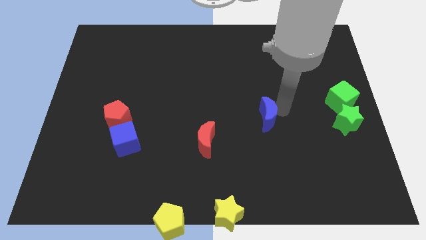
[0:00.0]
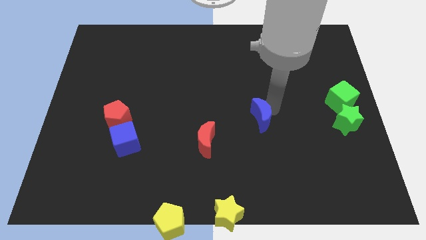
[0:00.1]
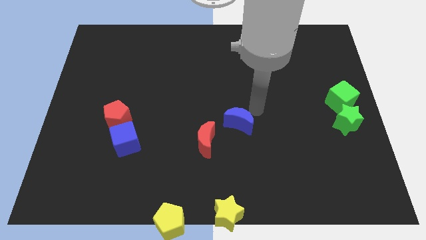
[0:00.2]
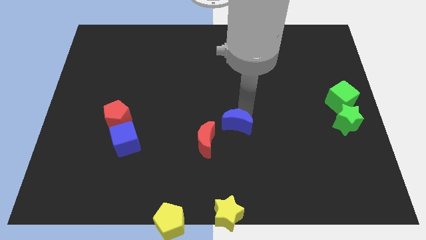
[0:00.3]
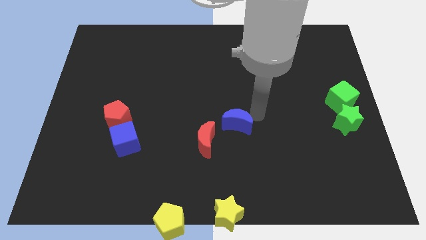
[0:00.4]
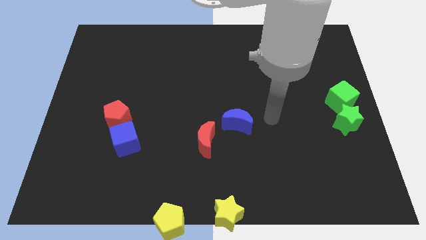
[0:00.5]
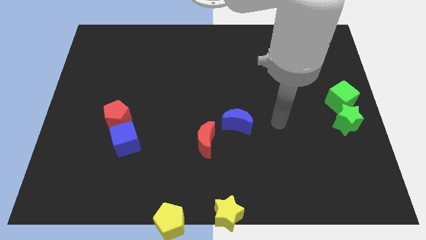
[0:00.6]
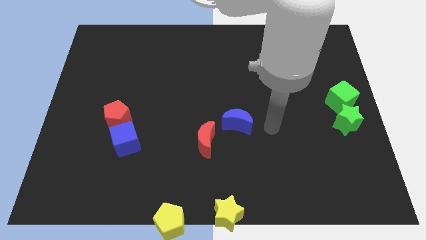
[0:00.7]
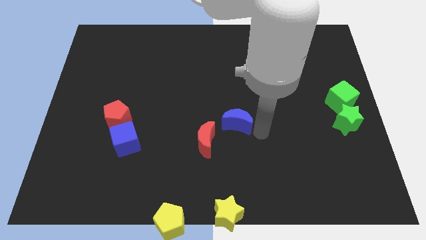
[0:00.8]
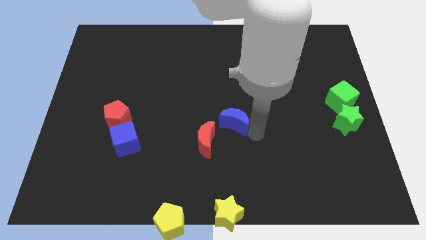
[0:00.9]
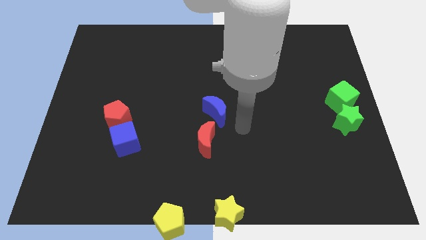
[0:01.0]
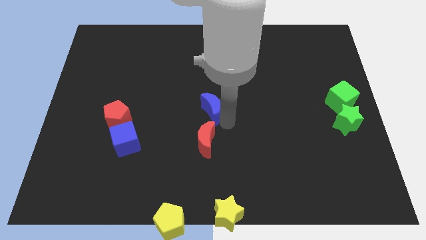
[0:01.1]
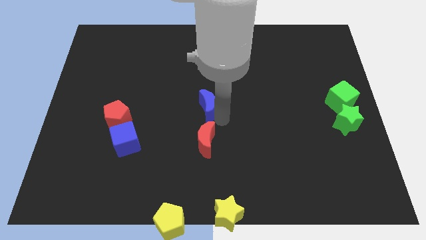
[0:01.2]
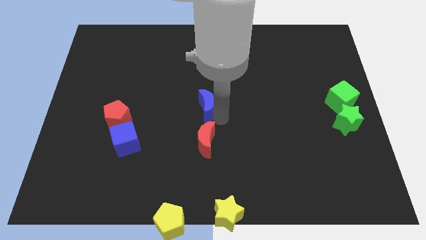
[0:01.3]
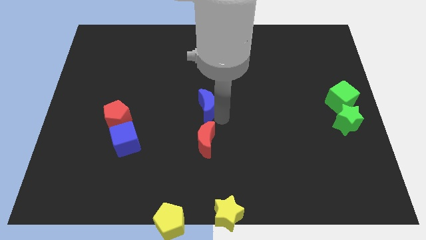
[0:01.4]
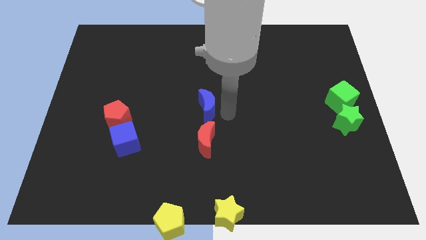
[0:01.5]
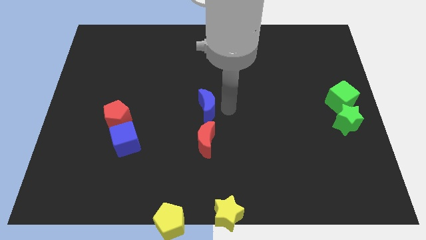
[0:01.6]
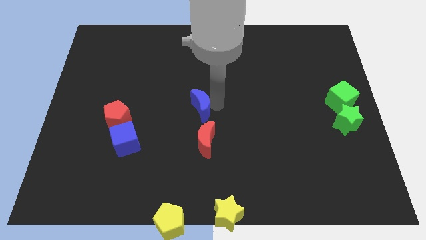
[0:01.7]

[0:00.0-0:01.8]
place blue crescent at the top of red crescent

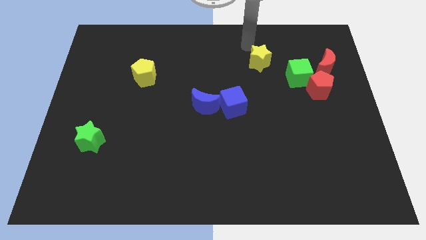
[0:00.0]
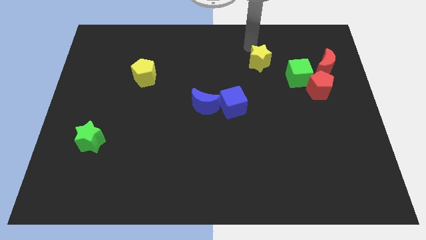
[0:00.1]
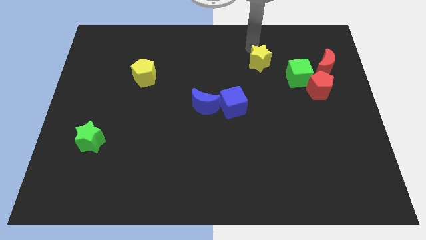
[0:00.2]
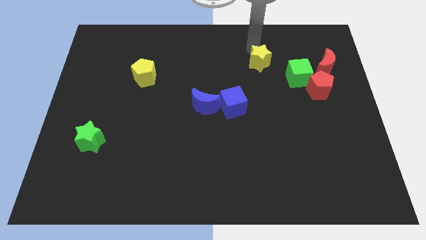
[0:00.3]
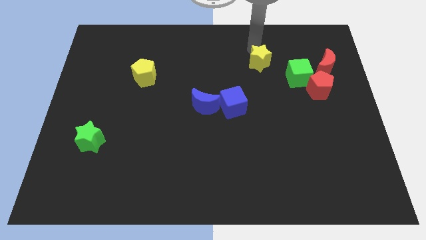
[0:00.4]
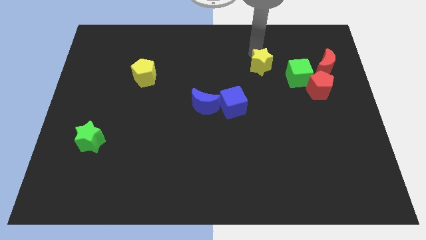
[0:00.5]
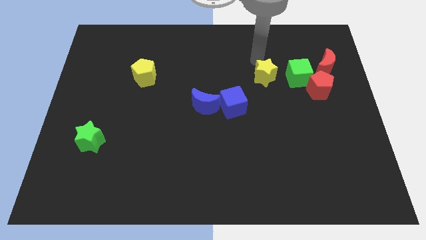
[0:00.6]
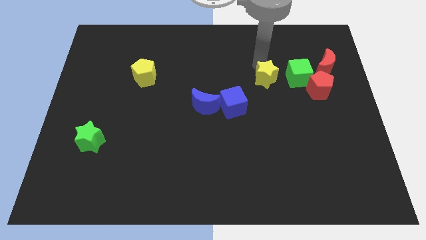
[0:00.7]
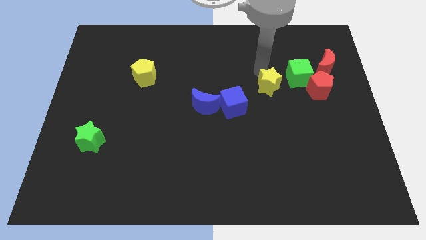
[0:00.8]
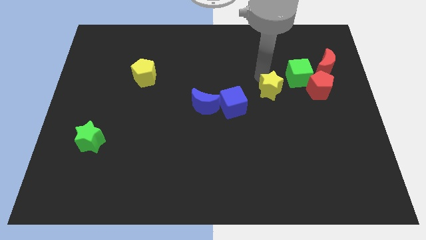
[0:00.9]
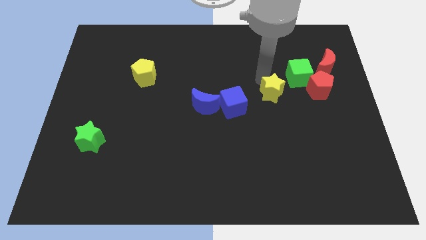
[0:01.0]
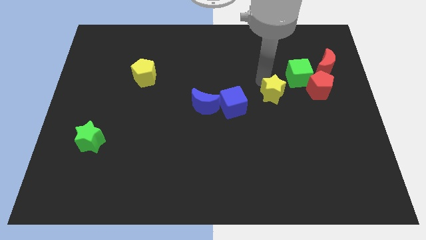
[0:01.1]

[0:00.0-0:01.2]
slide yellow star down to the left of red pentagon

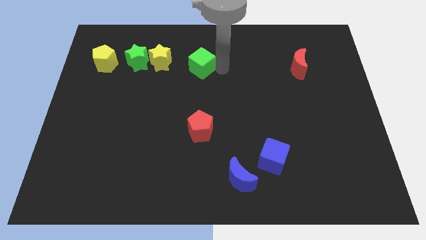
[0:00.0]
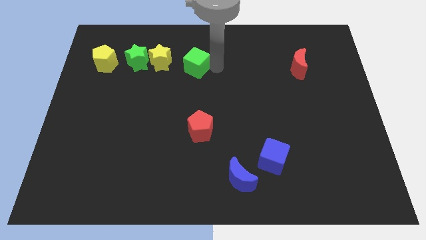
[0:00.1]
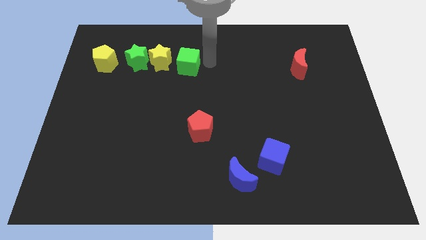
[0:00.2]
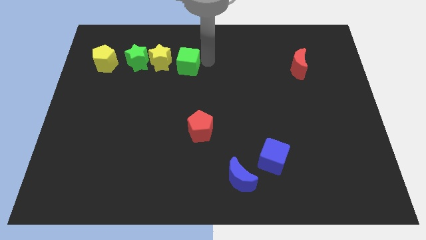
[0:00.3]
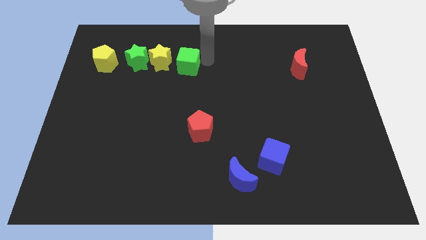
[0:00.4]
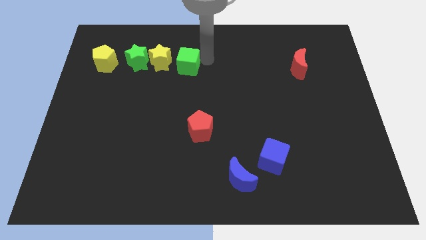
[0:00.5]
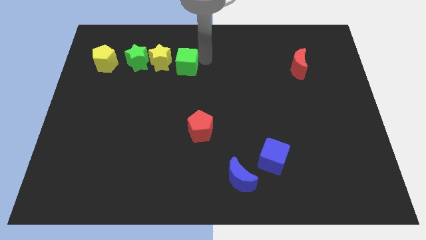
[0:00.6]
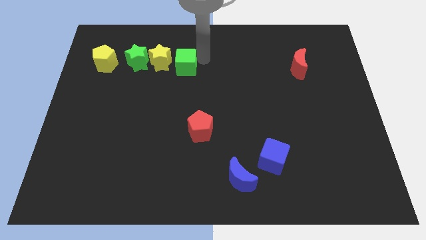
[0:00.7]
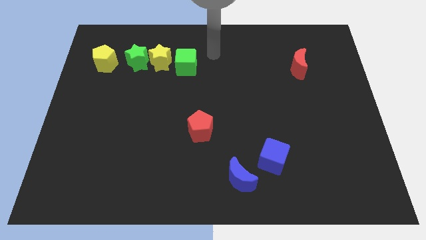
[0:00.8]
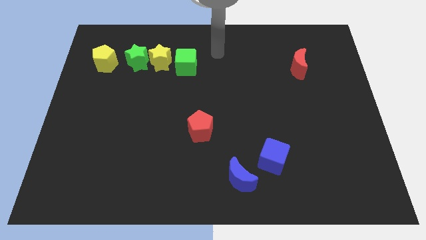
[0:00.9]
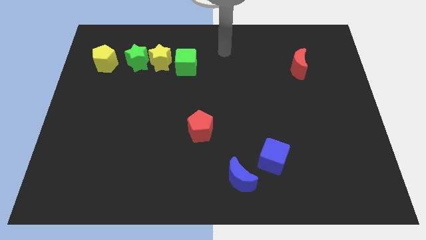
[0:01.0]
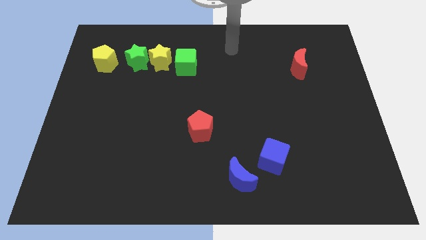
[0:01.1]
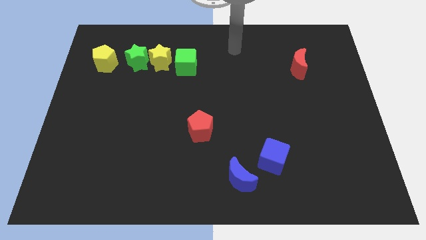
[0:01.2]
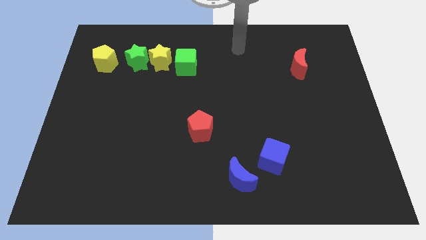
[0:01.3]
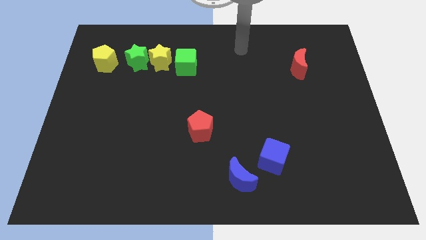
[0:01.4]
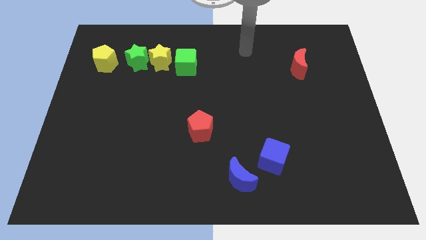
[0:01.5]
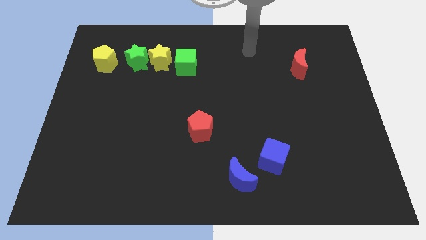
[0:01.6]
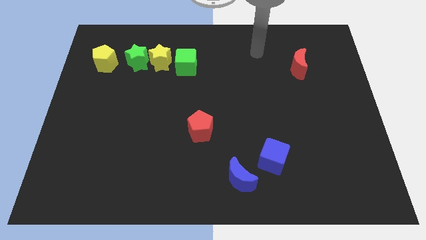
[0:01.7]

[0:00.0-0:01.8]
move the green cube close to the yellow star

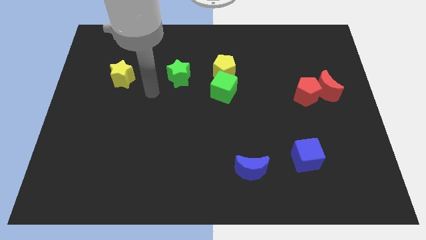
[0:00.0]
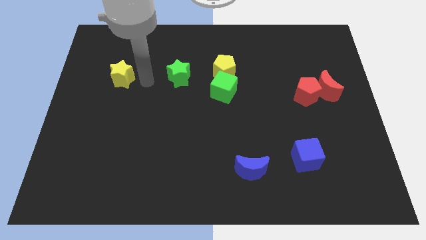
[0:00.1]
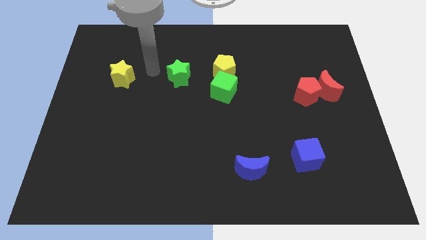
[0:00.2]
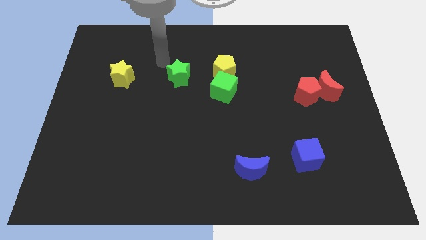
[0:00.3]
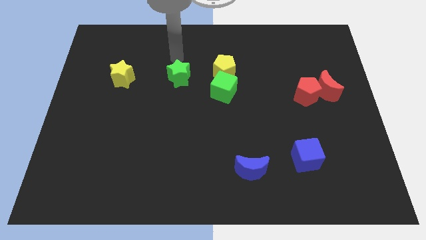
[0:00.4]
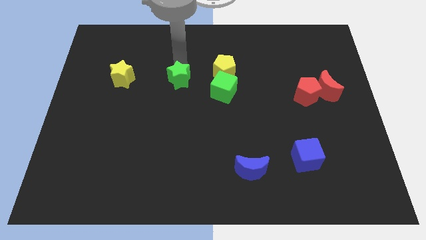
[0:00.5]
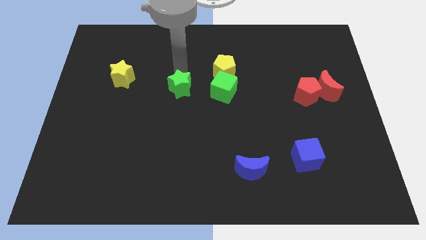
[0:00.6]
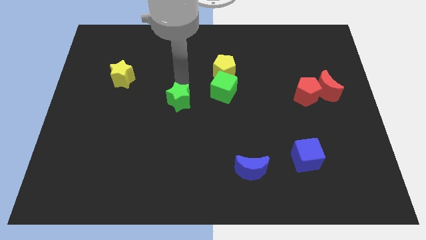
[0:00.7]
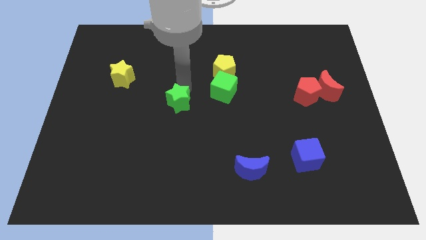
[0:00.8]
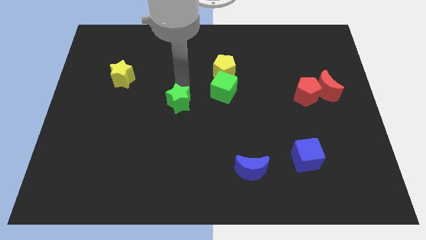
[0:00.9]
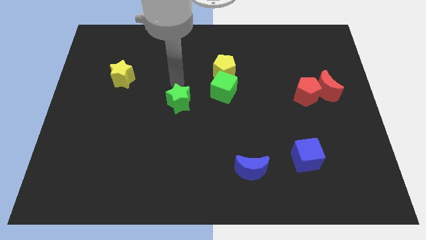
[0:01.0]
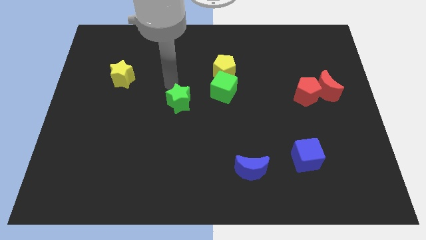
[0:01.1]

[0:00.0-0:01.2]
push the green star towards the bottom

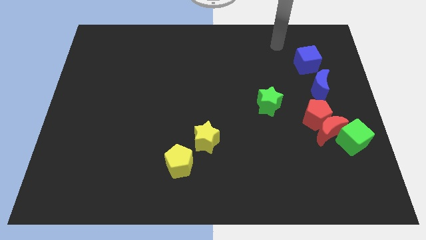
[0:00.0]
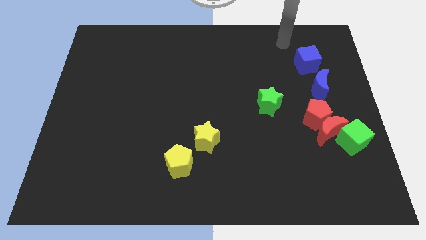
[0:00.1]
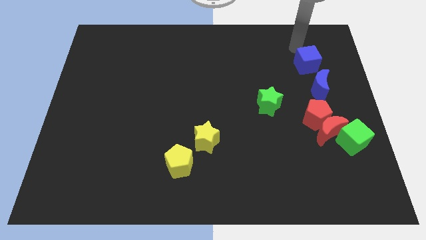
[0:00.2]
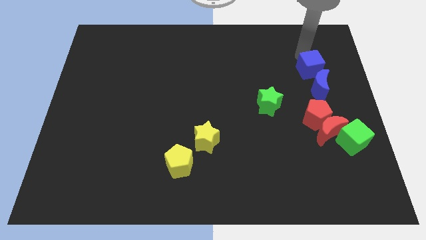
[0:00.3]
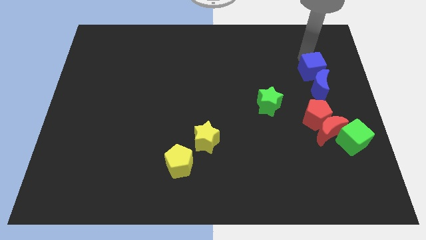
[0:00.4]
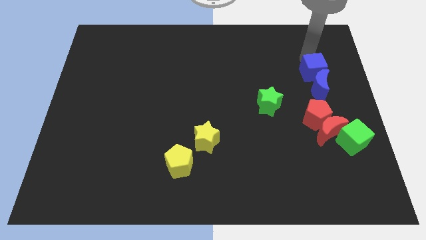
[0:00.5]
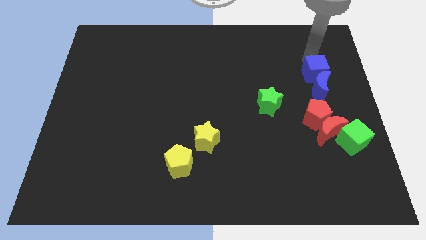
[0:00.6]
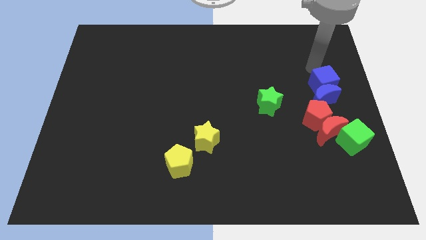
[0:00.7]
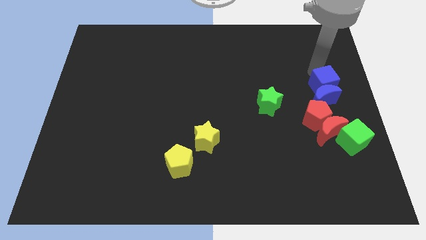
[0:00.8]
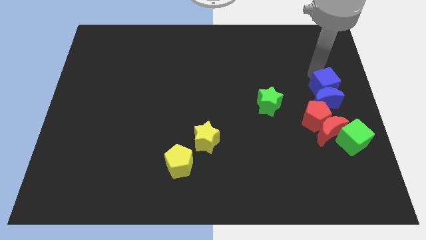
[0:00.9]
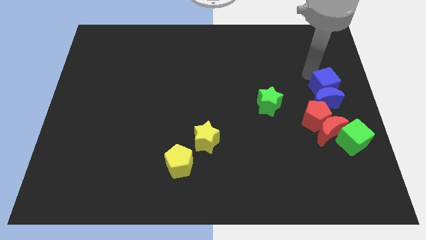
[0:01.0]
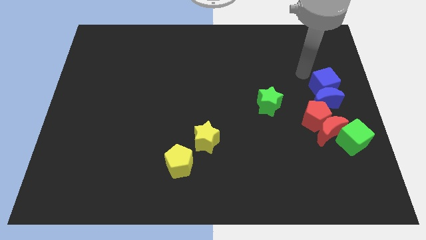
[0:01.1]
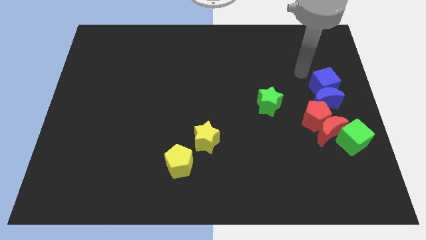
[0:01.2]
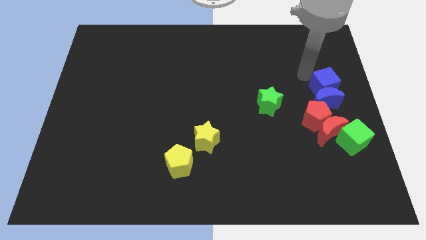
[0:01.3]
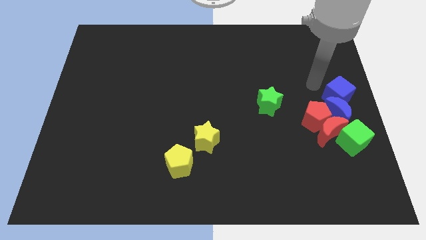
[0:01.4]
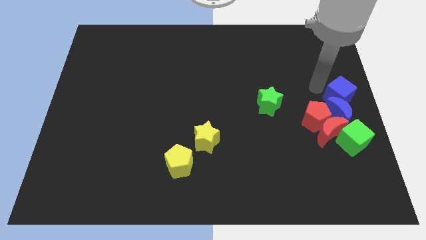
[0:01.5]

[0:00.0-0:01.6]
move the blue cube above the blue crescent

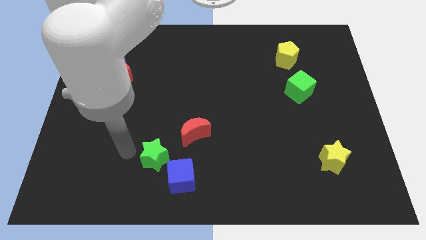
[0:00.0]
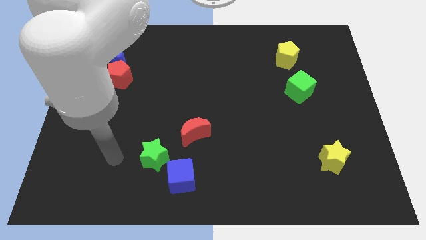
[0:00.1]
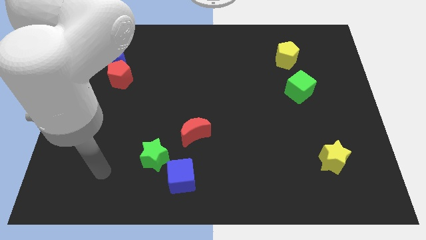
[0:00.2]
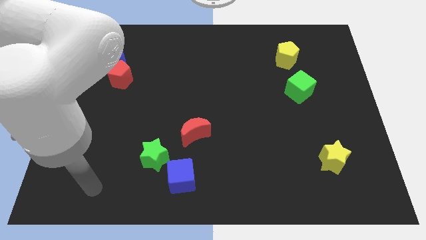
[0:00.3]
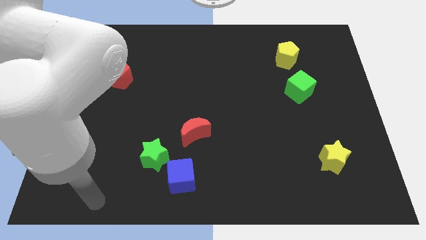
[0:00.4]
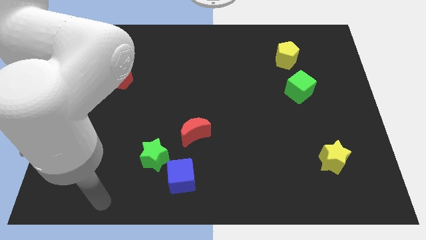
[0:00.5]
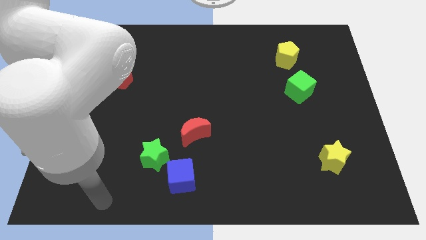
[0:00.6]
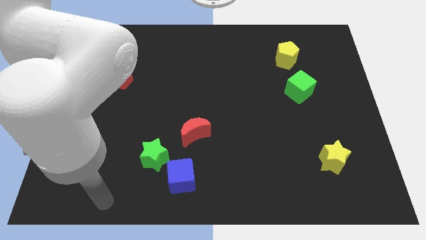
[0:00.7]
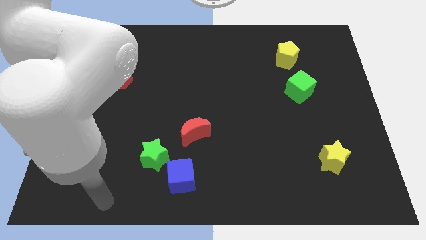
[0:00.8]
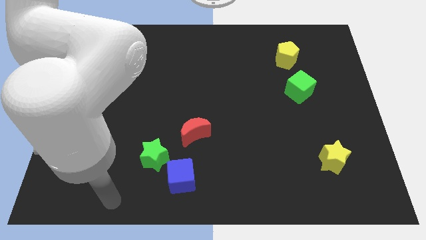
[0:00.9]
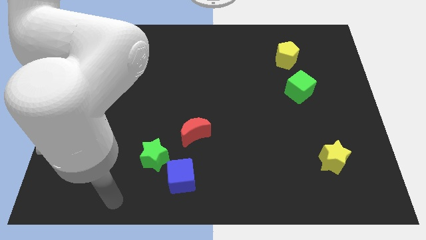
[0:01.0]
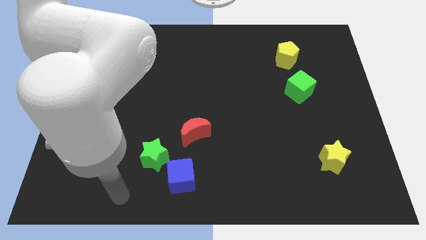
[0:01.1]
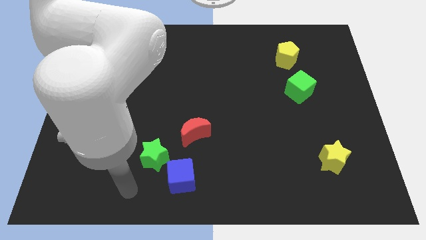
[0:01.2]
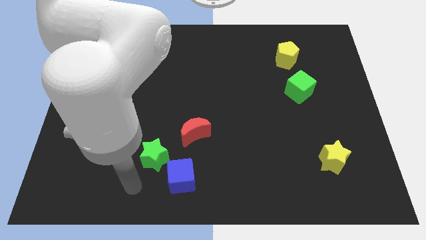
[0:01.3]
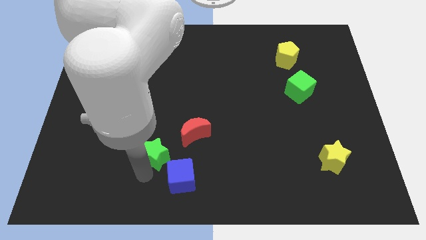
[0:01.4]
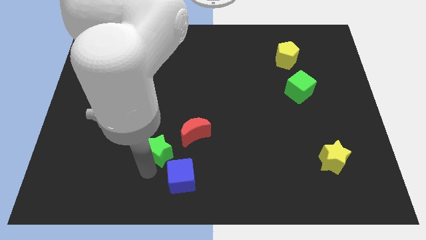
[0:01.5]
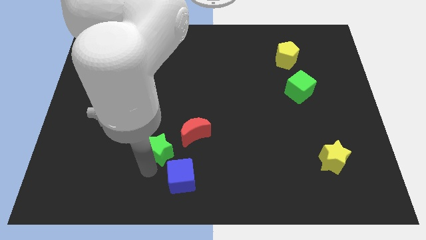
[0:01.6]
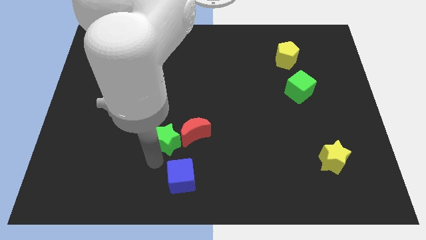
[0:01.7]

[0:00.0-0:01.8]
touch the green star
